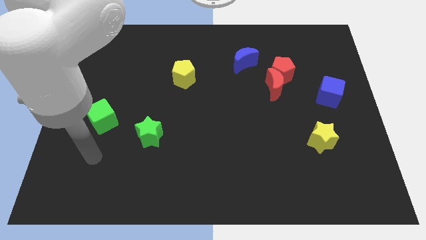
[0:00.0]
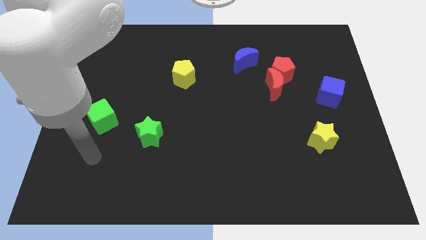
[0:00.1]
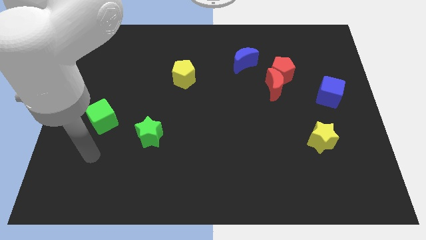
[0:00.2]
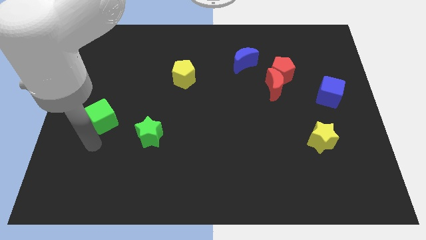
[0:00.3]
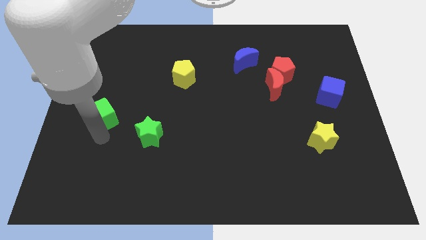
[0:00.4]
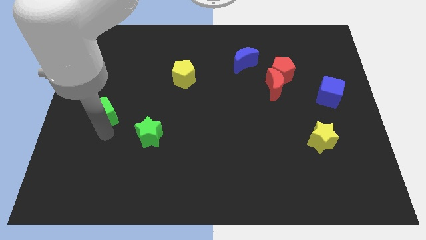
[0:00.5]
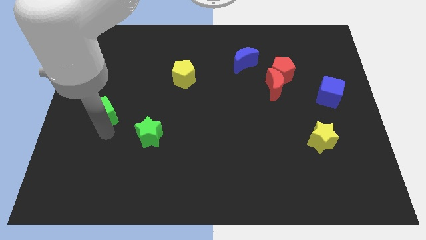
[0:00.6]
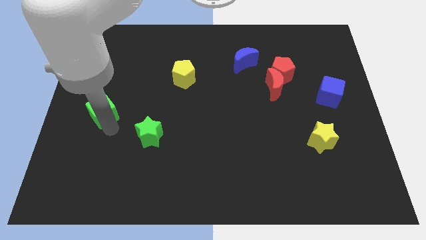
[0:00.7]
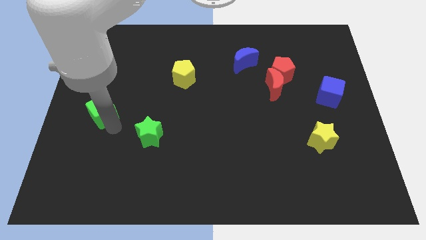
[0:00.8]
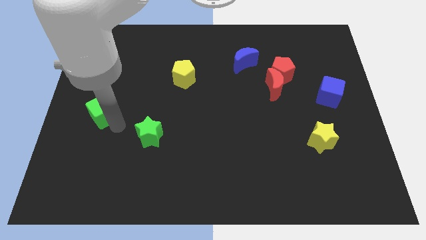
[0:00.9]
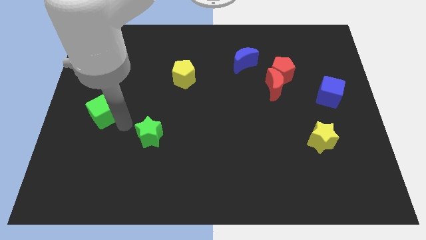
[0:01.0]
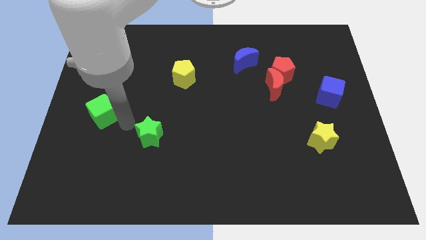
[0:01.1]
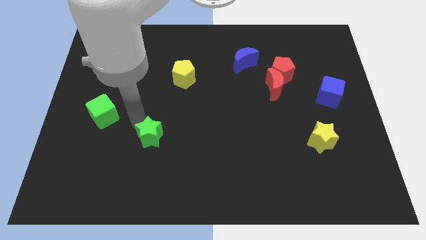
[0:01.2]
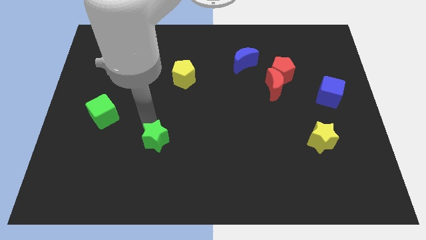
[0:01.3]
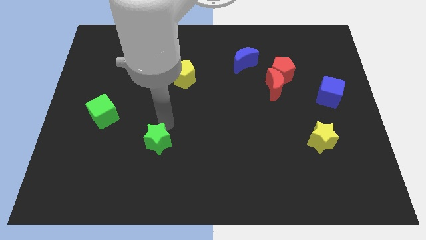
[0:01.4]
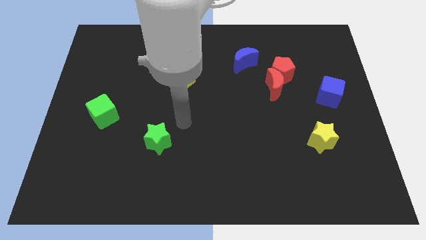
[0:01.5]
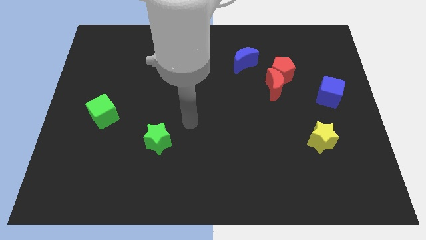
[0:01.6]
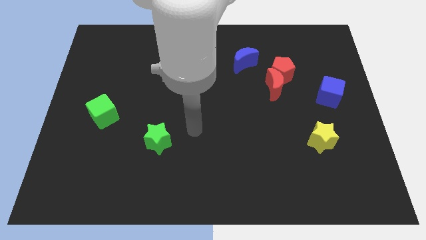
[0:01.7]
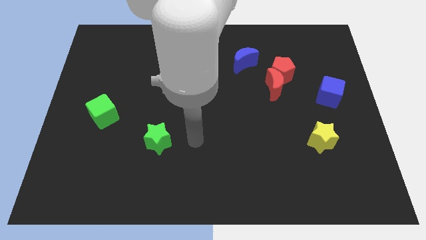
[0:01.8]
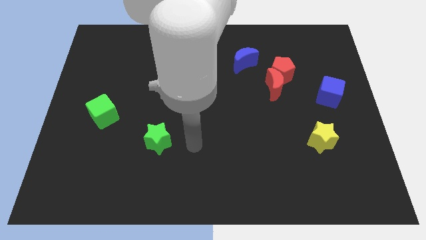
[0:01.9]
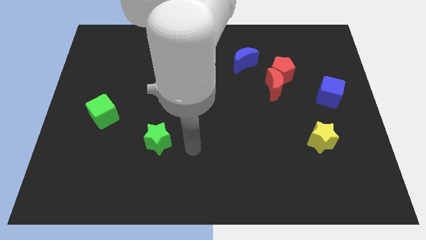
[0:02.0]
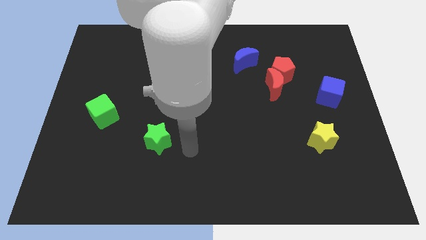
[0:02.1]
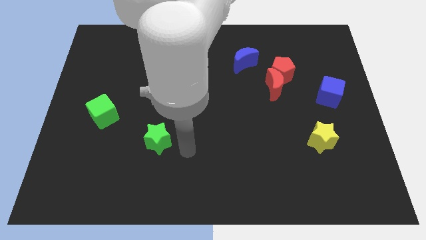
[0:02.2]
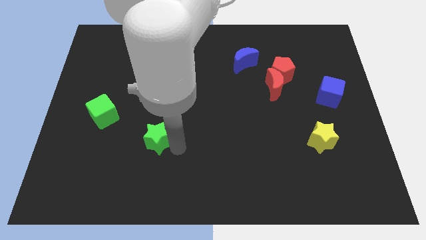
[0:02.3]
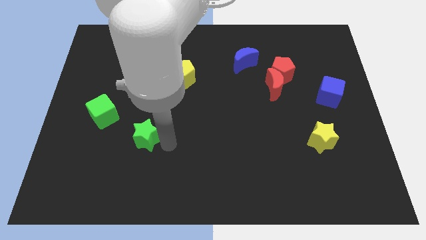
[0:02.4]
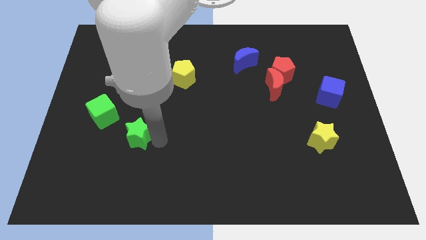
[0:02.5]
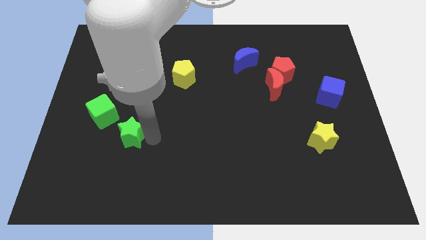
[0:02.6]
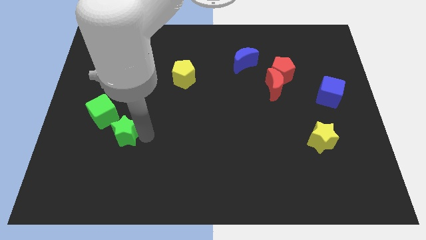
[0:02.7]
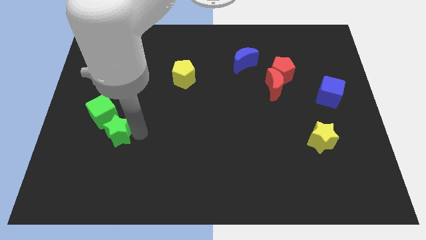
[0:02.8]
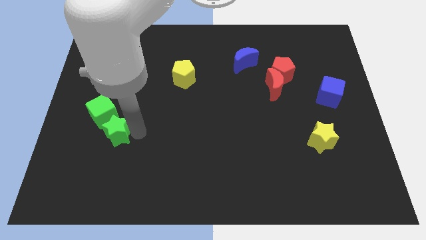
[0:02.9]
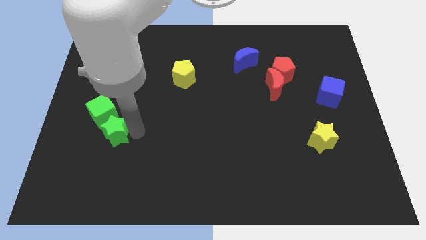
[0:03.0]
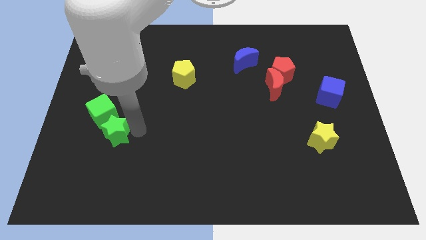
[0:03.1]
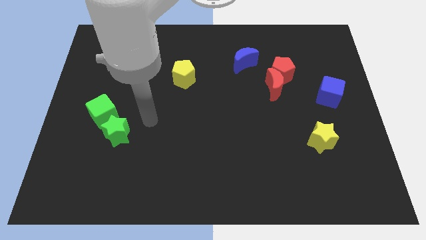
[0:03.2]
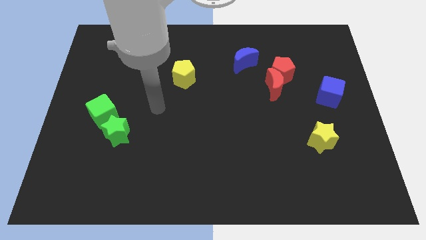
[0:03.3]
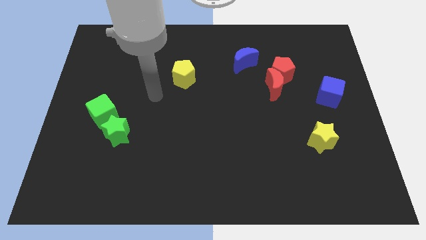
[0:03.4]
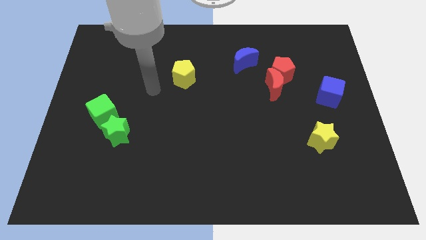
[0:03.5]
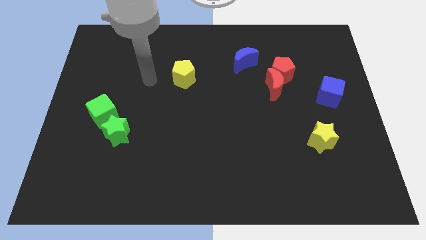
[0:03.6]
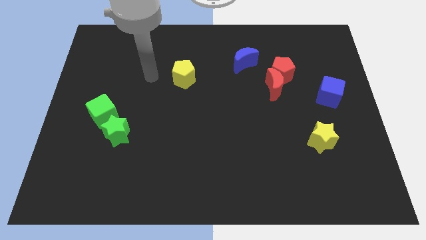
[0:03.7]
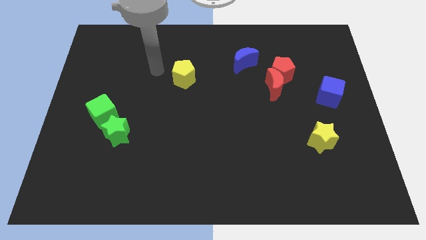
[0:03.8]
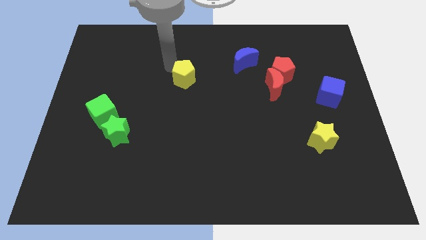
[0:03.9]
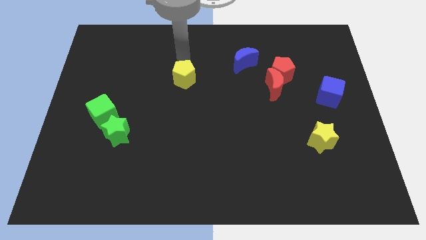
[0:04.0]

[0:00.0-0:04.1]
move green star close to green block

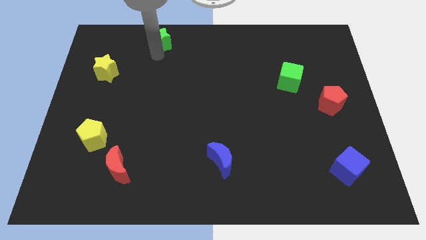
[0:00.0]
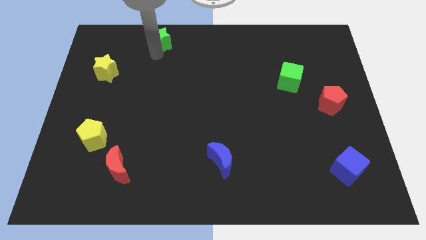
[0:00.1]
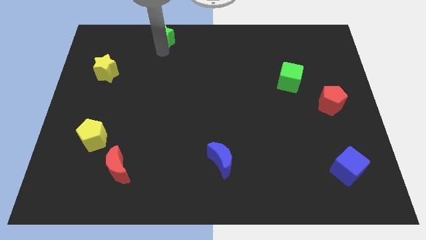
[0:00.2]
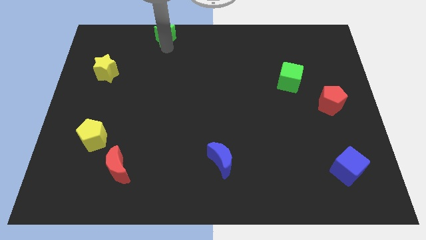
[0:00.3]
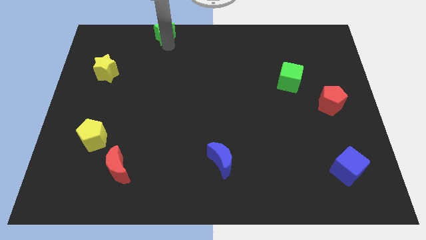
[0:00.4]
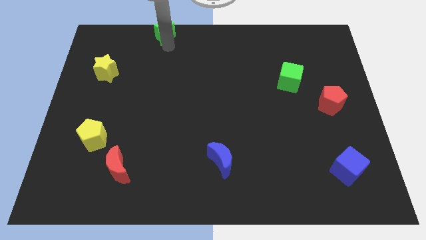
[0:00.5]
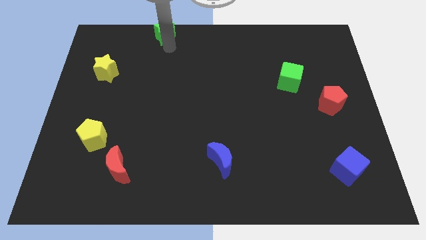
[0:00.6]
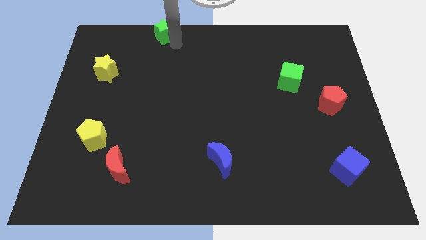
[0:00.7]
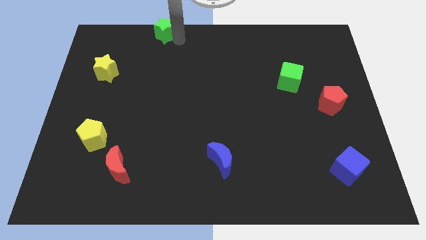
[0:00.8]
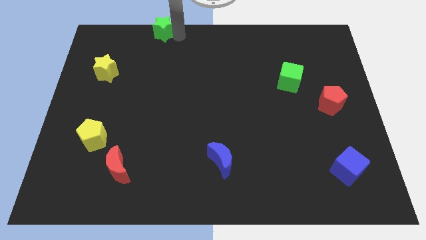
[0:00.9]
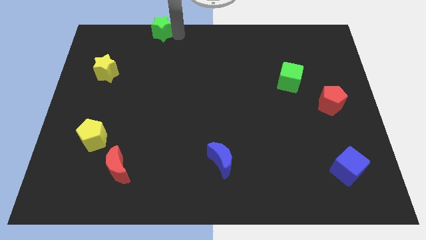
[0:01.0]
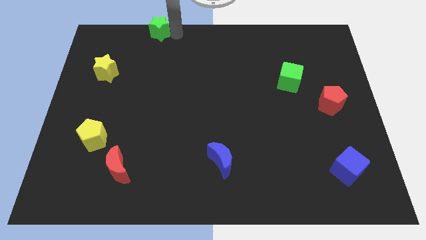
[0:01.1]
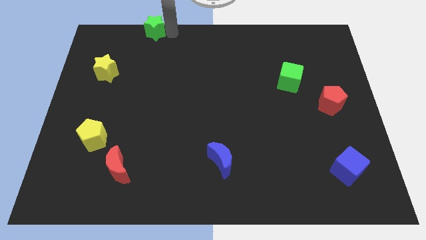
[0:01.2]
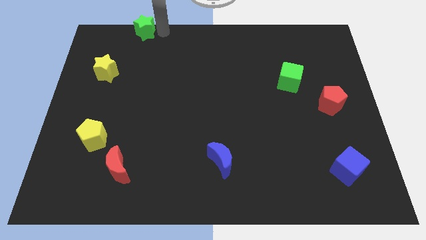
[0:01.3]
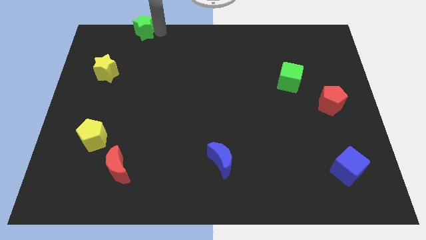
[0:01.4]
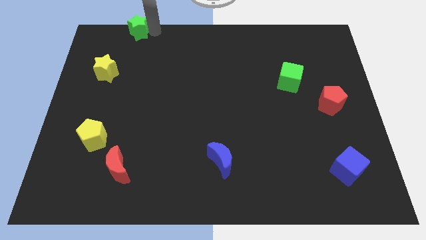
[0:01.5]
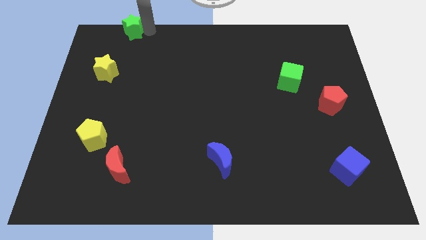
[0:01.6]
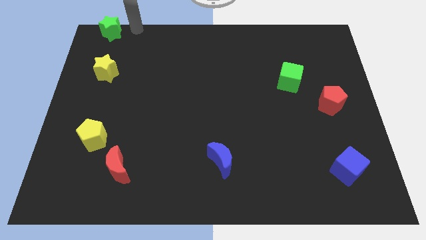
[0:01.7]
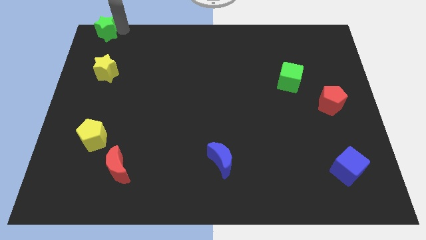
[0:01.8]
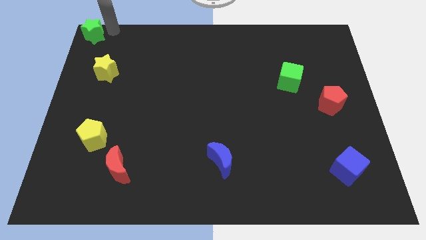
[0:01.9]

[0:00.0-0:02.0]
move the green star to the top left of the board

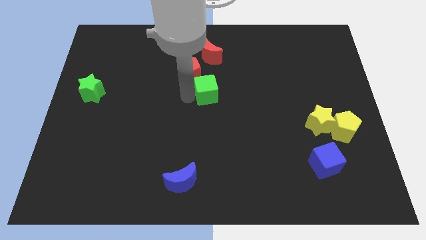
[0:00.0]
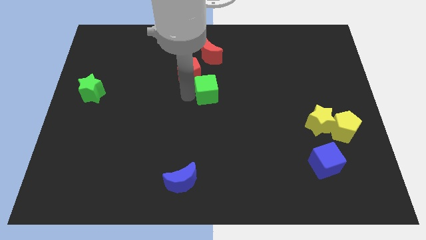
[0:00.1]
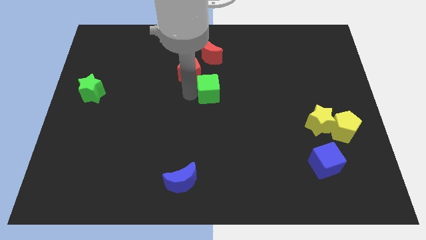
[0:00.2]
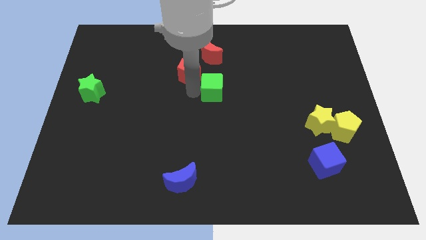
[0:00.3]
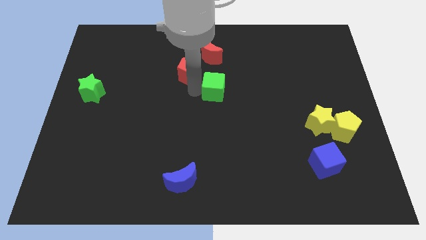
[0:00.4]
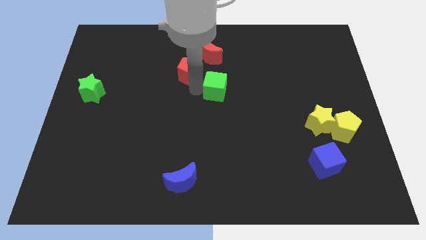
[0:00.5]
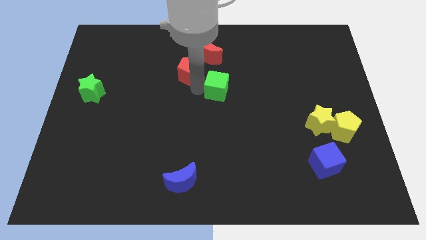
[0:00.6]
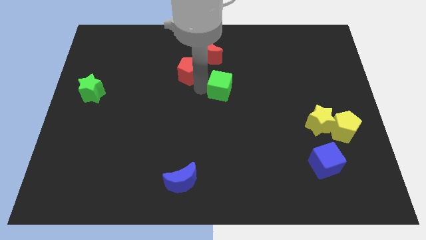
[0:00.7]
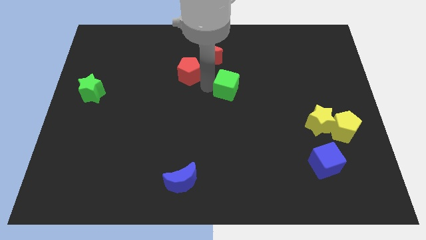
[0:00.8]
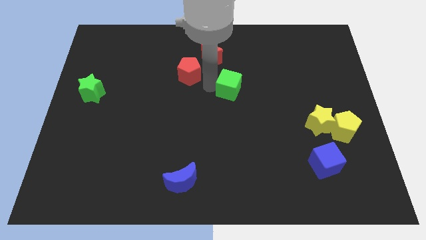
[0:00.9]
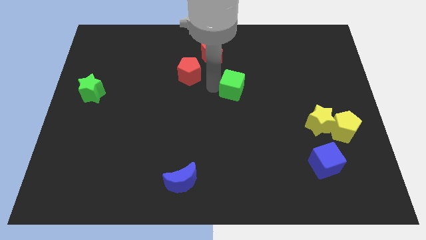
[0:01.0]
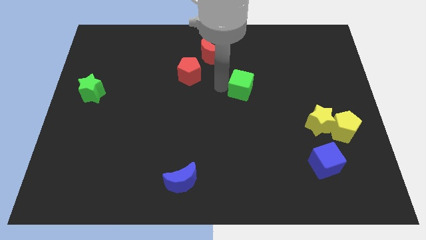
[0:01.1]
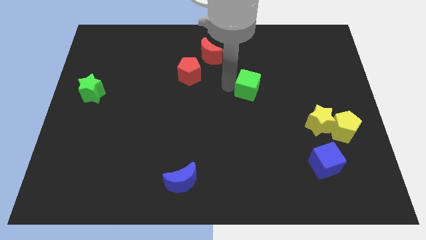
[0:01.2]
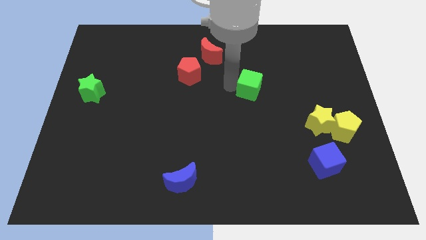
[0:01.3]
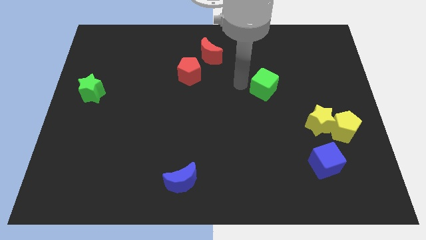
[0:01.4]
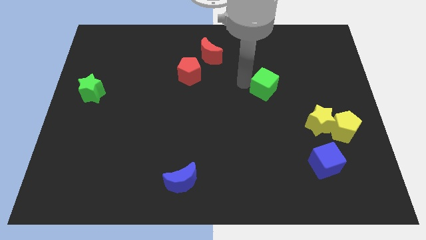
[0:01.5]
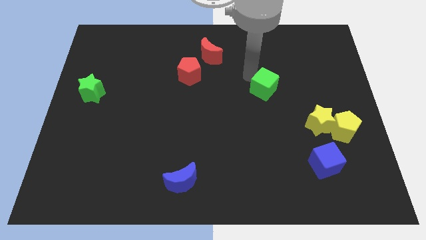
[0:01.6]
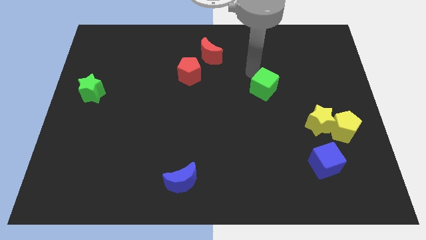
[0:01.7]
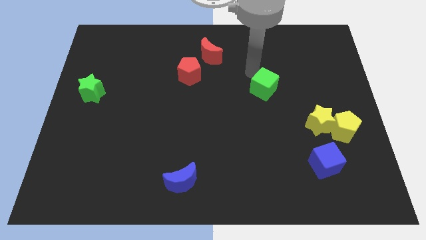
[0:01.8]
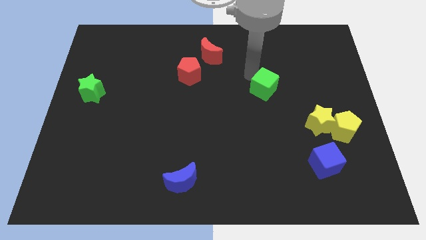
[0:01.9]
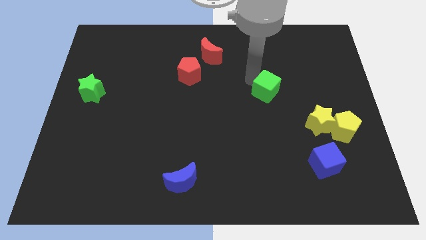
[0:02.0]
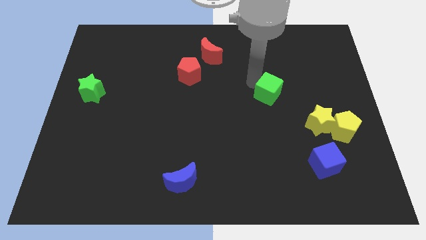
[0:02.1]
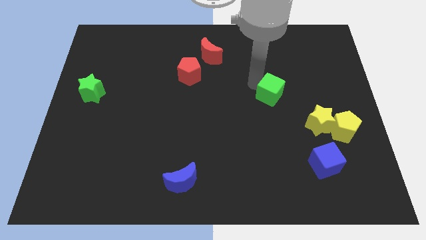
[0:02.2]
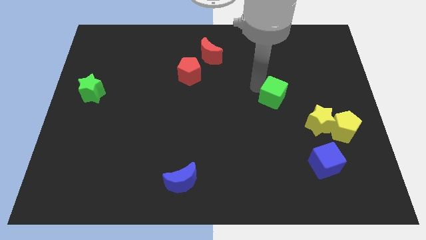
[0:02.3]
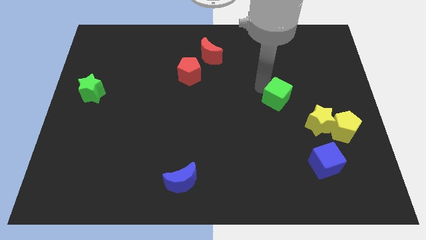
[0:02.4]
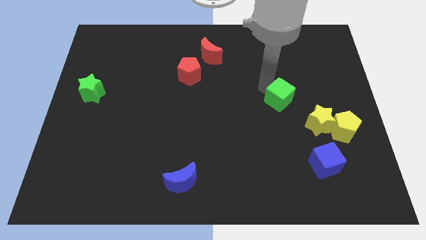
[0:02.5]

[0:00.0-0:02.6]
move the green cube to the bottom right of the red crescent
